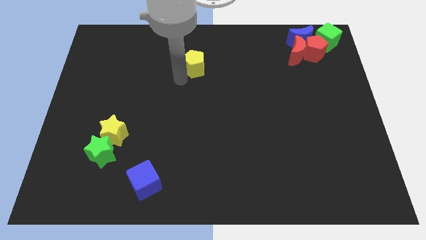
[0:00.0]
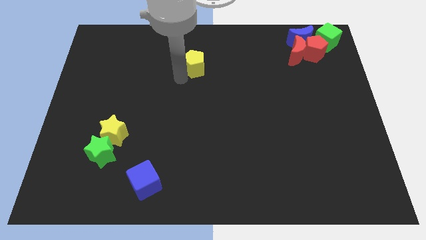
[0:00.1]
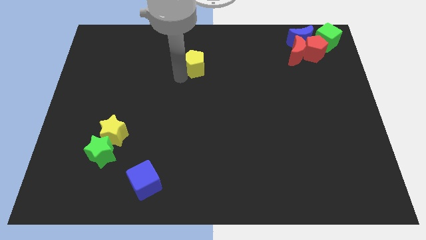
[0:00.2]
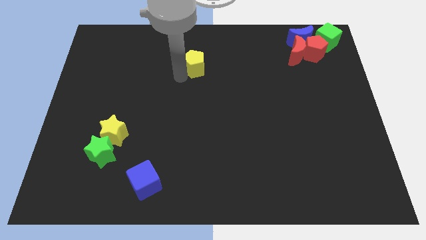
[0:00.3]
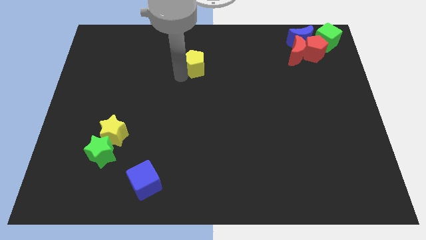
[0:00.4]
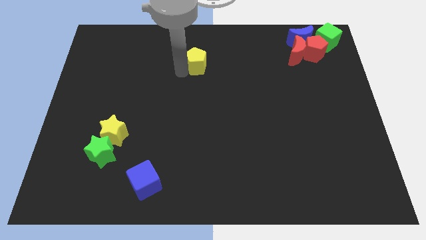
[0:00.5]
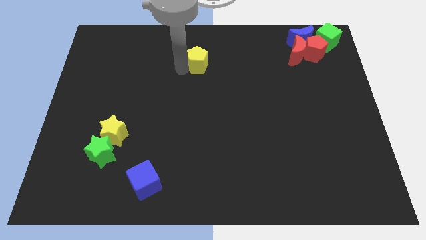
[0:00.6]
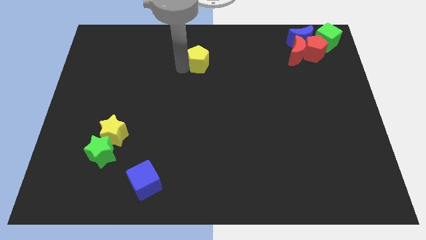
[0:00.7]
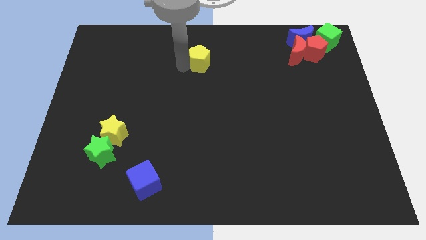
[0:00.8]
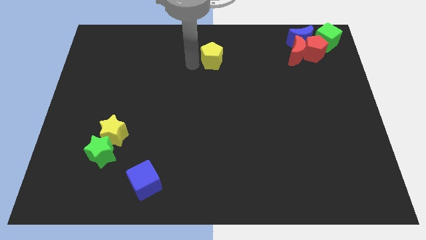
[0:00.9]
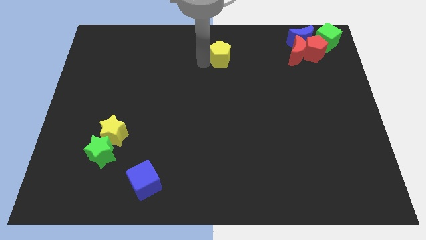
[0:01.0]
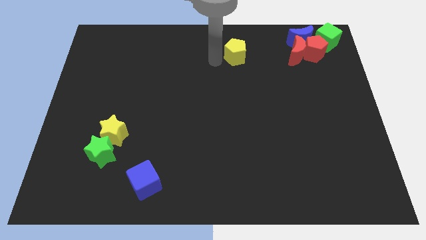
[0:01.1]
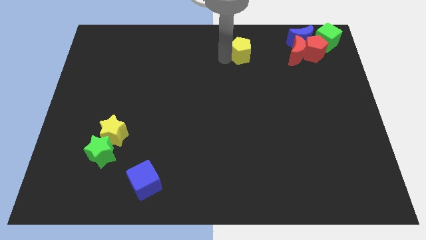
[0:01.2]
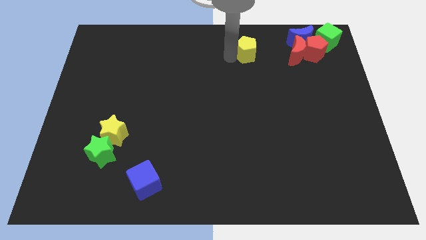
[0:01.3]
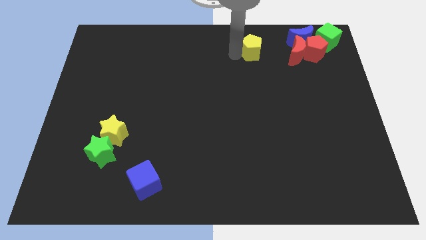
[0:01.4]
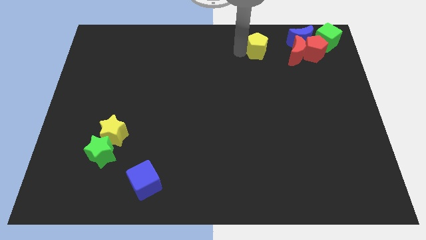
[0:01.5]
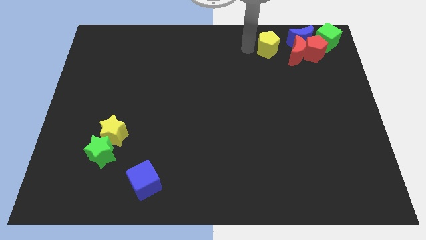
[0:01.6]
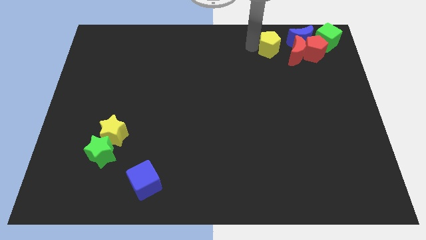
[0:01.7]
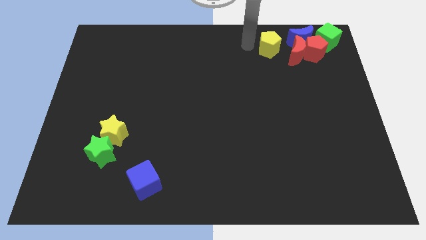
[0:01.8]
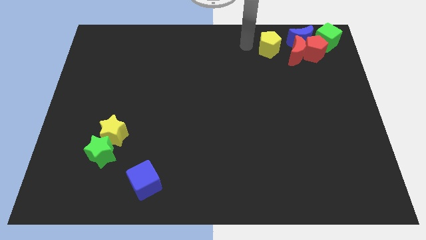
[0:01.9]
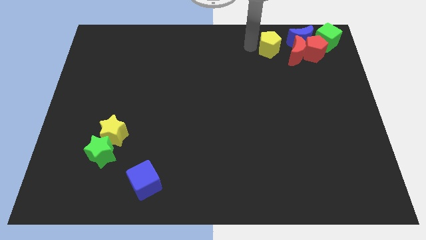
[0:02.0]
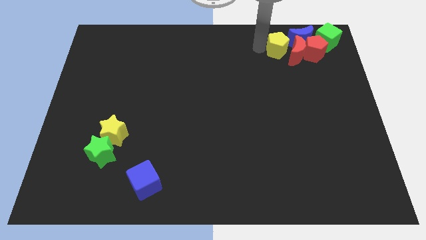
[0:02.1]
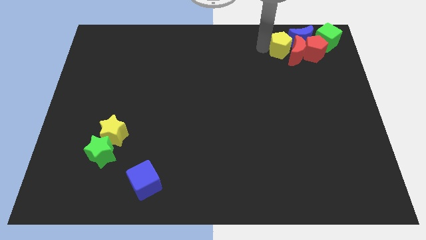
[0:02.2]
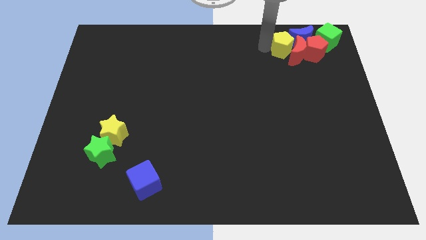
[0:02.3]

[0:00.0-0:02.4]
move the yellow pentagon to the left of red moon

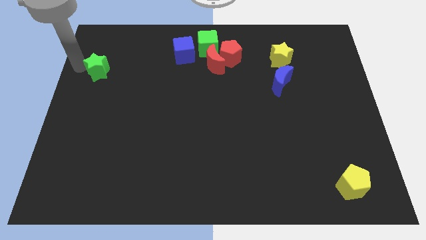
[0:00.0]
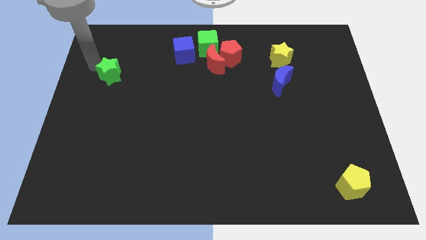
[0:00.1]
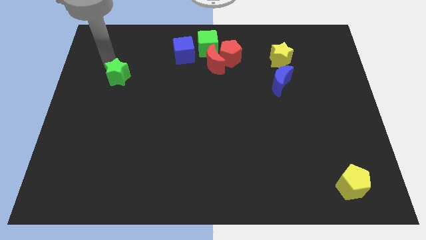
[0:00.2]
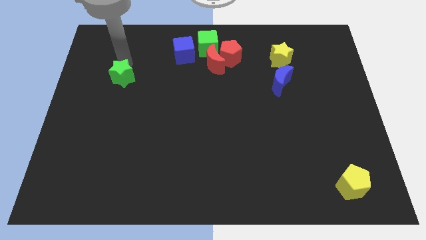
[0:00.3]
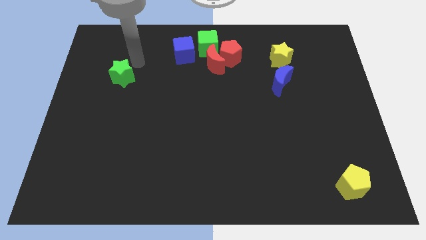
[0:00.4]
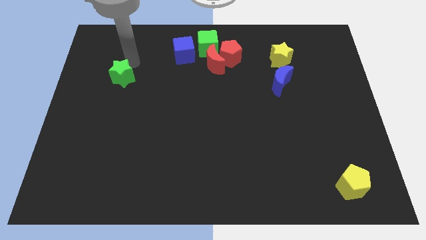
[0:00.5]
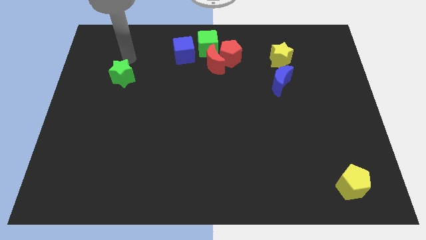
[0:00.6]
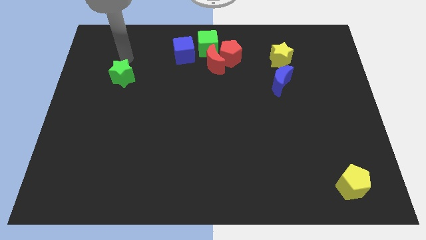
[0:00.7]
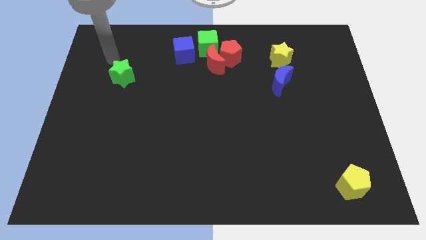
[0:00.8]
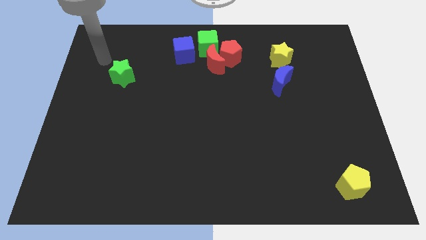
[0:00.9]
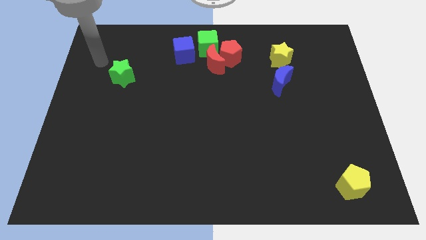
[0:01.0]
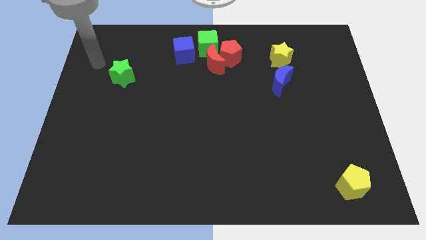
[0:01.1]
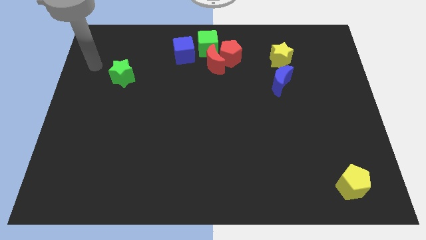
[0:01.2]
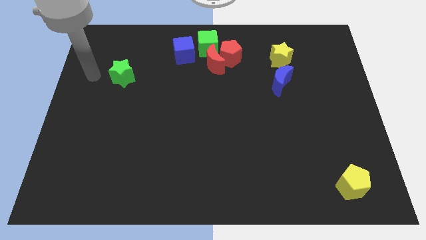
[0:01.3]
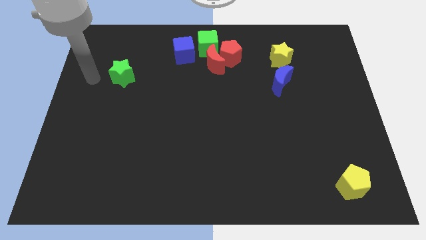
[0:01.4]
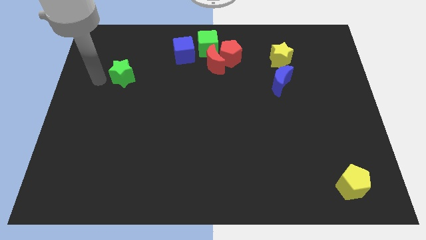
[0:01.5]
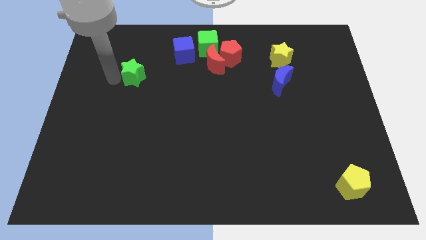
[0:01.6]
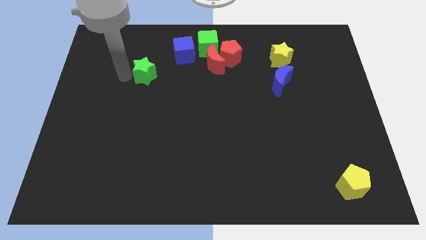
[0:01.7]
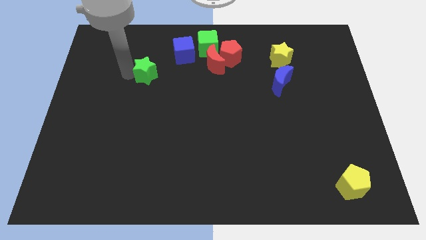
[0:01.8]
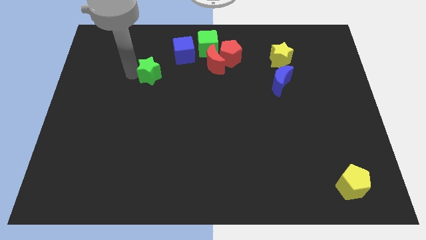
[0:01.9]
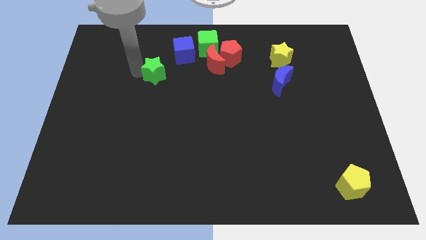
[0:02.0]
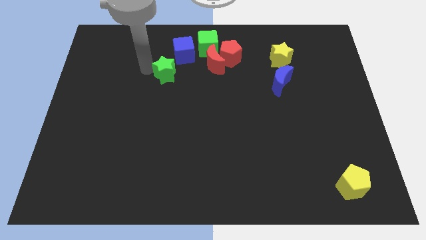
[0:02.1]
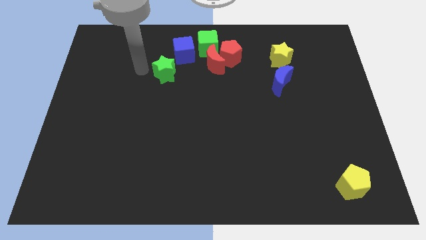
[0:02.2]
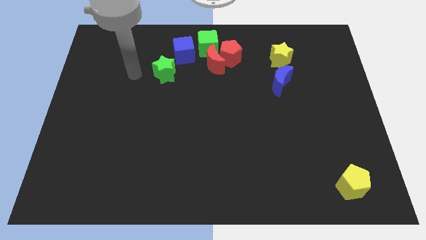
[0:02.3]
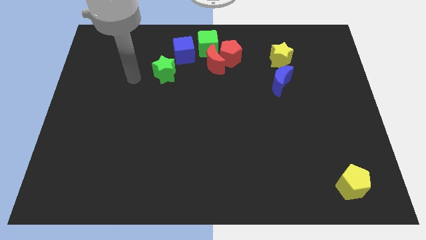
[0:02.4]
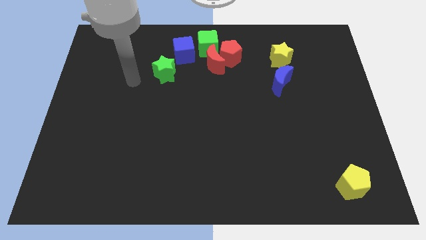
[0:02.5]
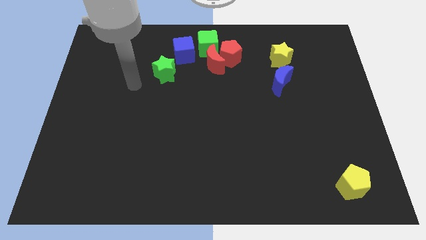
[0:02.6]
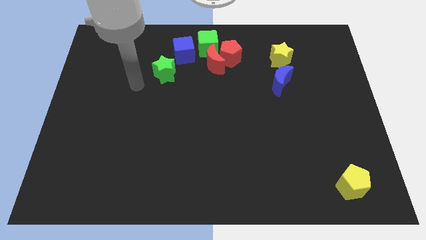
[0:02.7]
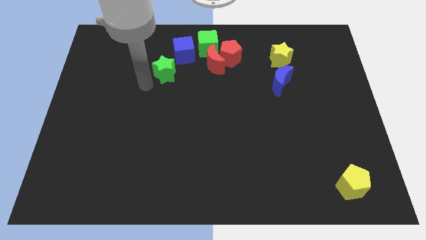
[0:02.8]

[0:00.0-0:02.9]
move the arm to the left of the green star

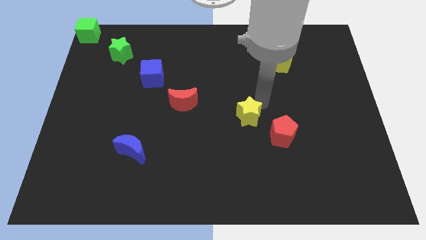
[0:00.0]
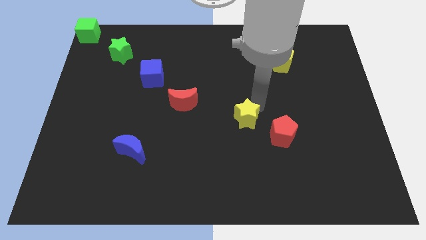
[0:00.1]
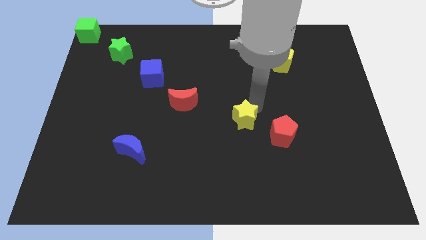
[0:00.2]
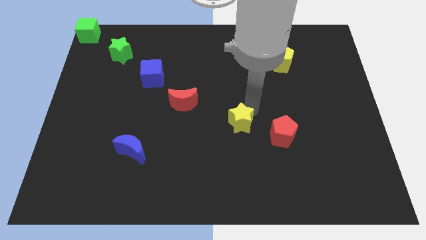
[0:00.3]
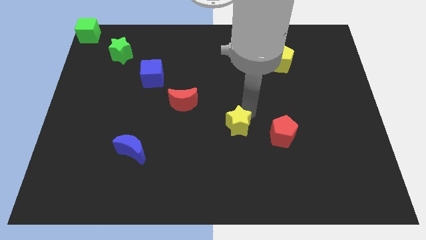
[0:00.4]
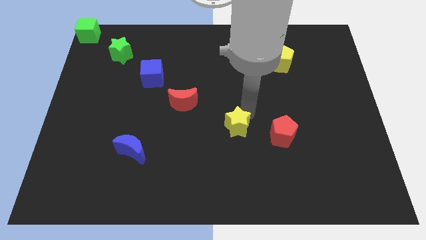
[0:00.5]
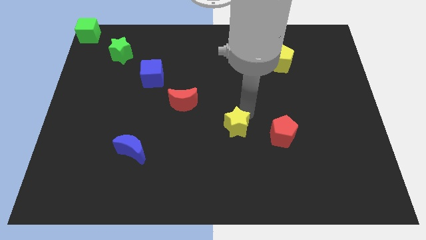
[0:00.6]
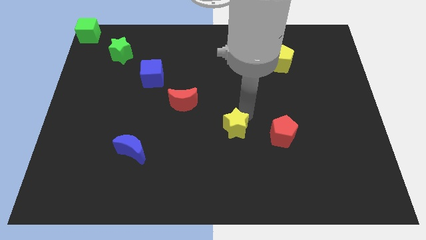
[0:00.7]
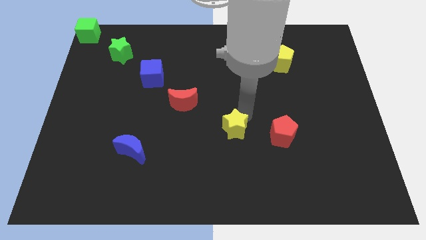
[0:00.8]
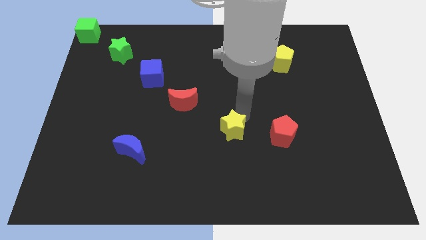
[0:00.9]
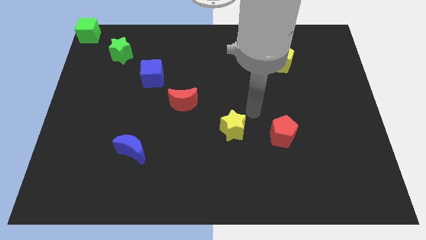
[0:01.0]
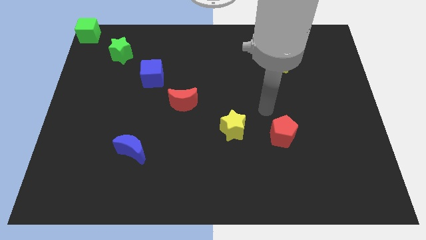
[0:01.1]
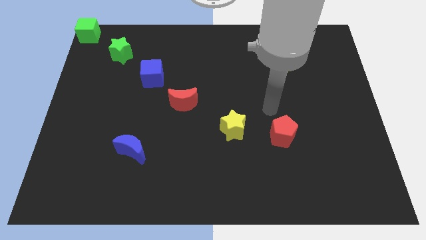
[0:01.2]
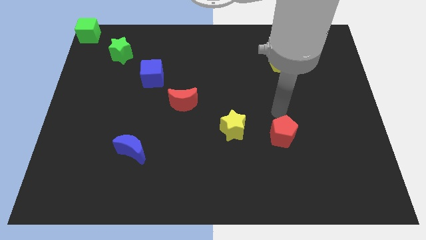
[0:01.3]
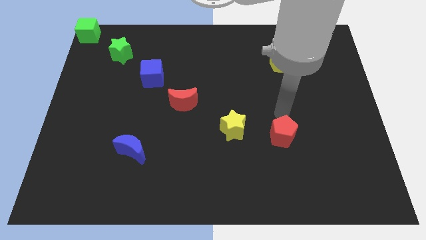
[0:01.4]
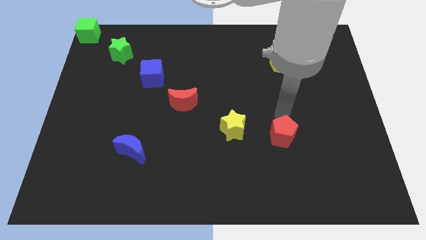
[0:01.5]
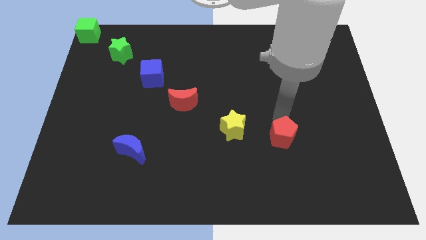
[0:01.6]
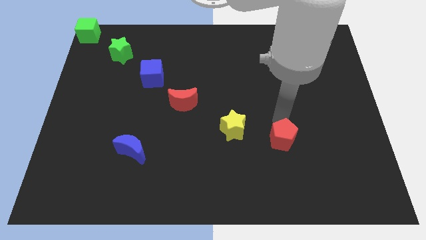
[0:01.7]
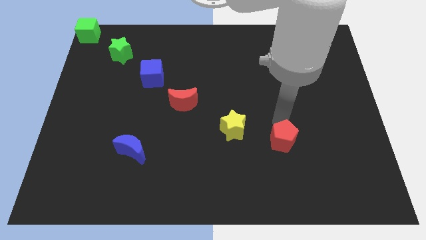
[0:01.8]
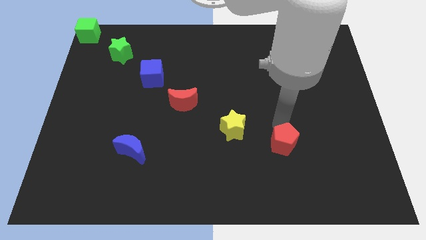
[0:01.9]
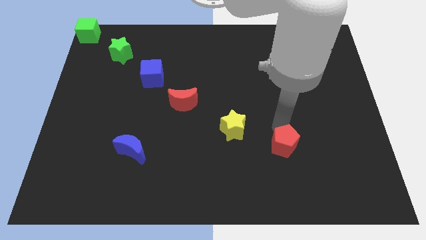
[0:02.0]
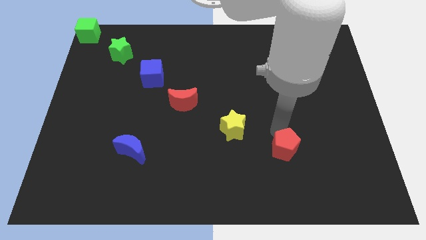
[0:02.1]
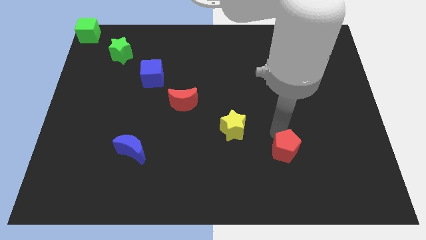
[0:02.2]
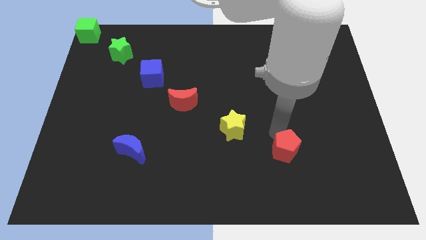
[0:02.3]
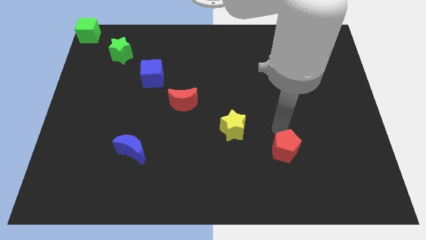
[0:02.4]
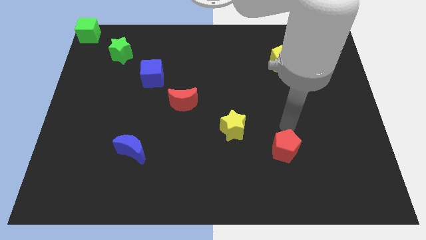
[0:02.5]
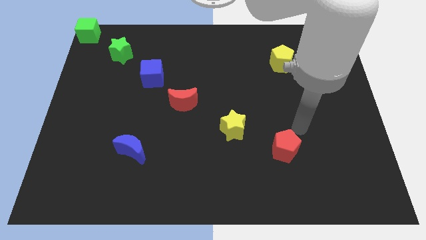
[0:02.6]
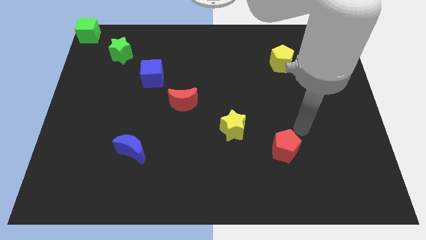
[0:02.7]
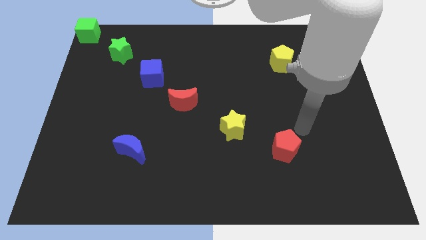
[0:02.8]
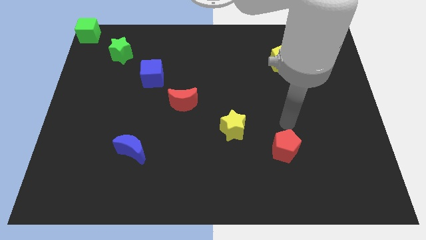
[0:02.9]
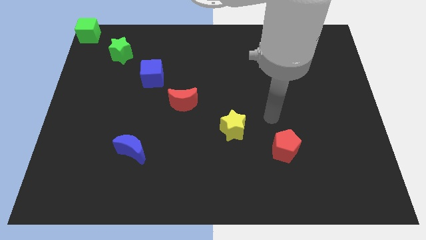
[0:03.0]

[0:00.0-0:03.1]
place yellow star red pentagon towards downward

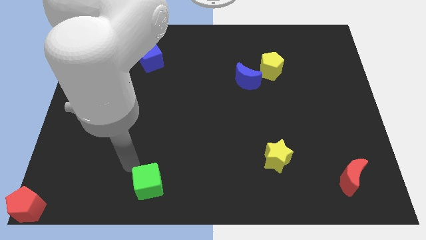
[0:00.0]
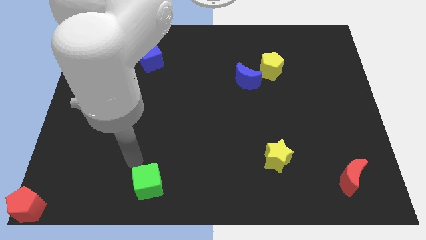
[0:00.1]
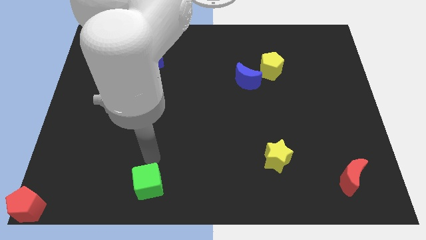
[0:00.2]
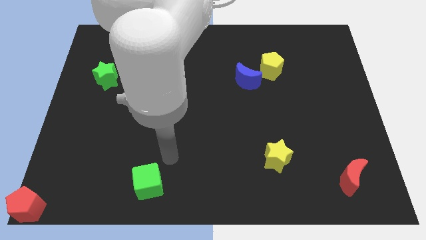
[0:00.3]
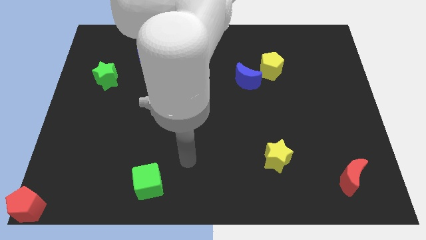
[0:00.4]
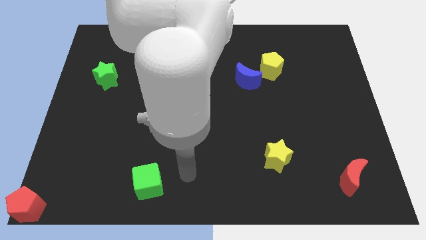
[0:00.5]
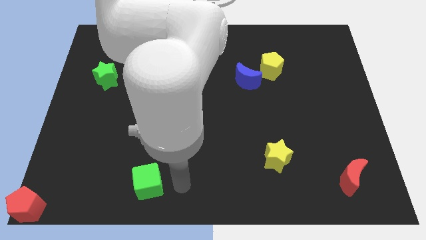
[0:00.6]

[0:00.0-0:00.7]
place your arm to the right side of green cube
